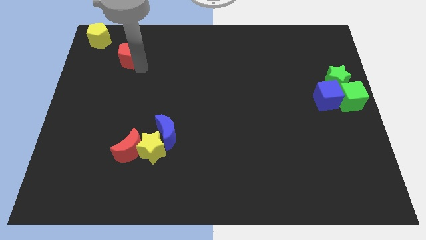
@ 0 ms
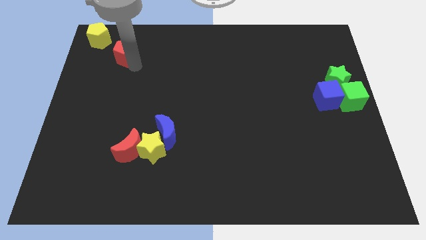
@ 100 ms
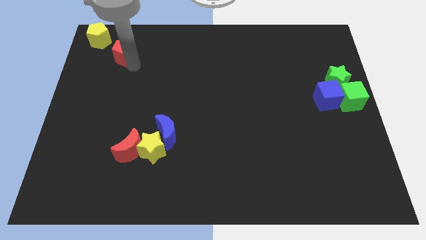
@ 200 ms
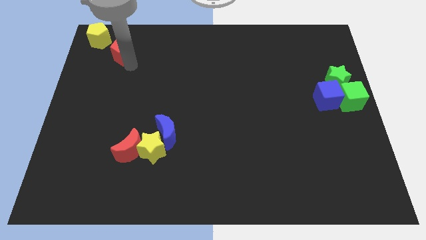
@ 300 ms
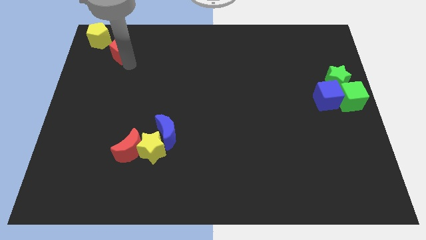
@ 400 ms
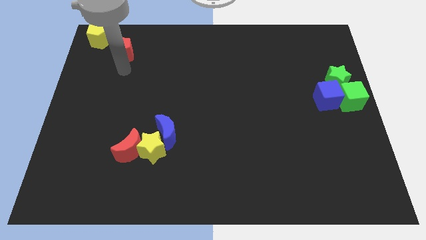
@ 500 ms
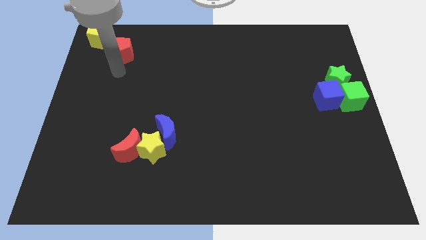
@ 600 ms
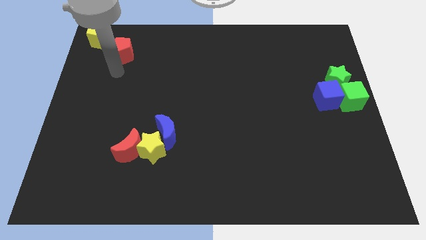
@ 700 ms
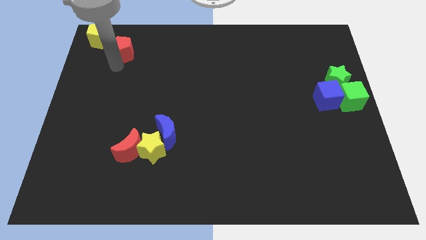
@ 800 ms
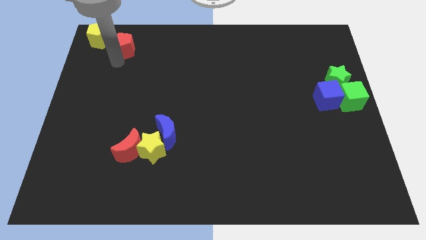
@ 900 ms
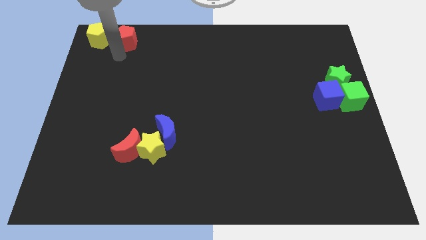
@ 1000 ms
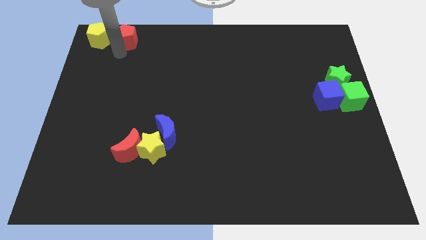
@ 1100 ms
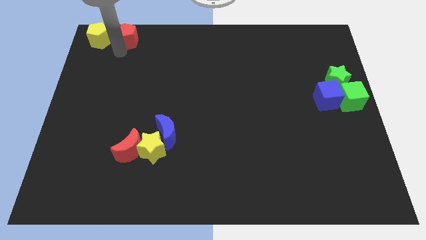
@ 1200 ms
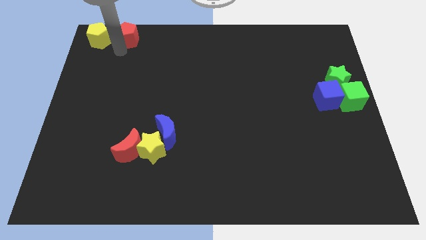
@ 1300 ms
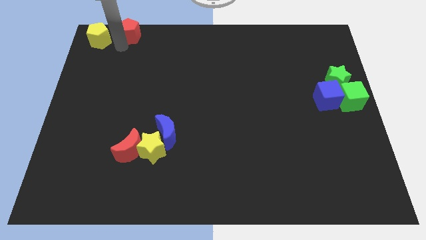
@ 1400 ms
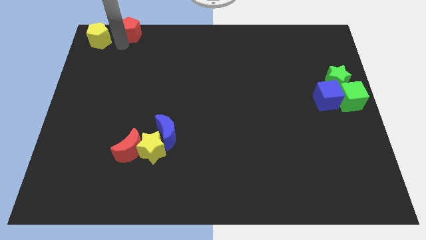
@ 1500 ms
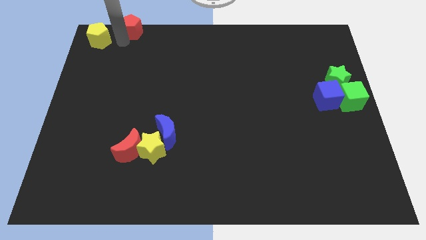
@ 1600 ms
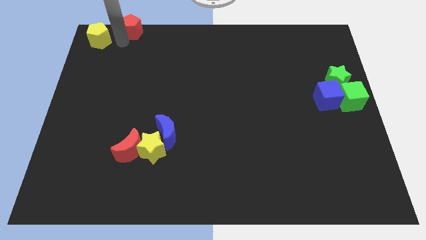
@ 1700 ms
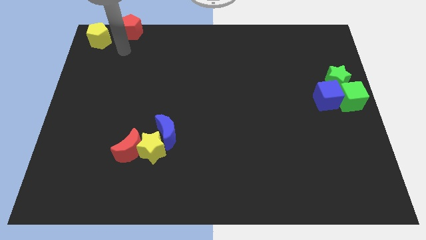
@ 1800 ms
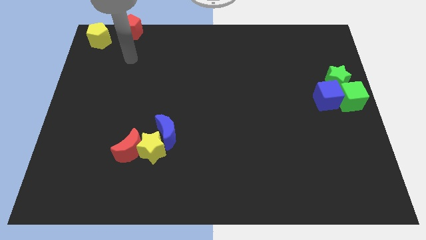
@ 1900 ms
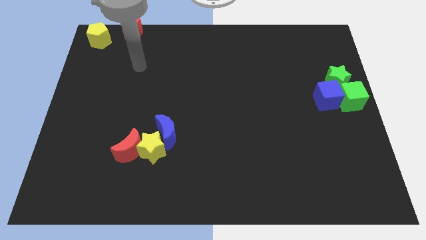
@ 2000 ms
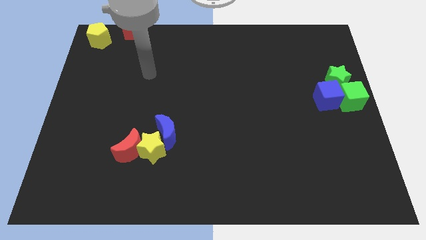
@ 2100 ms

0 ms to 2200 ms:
place red pentagon to the right of yellow pentagon

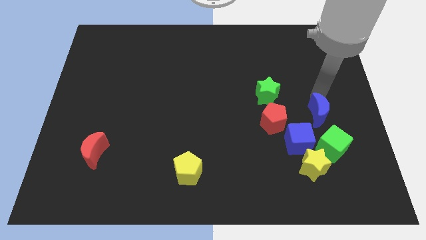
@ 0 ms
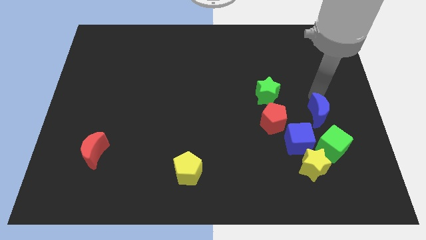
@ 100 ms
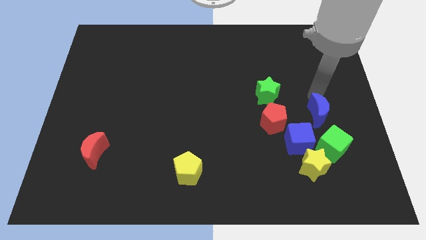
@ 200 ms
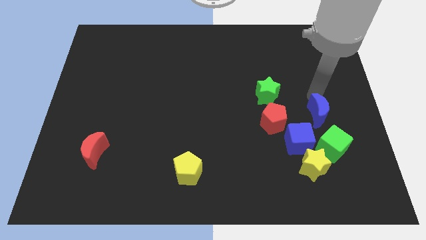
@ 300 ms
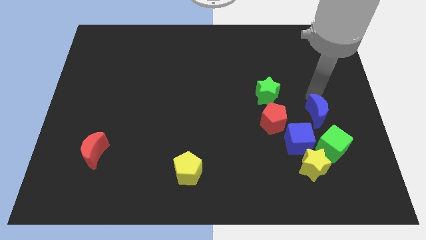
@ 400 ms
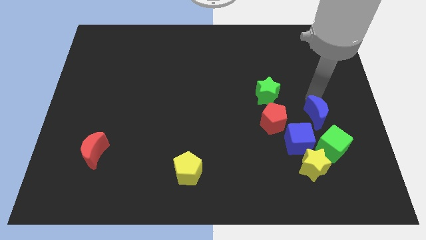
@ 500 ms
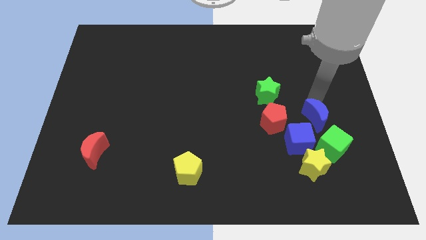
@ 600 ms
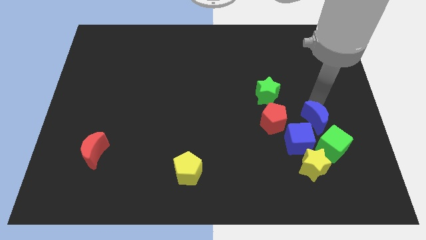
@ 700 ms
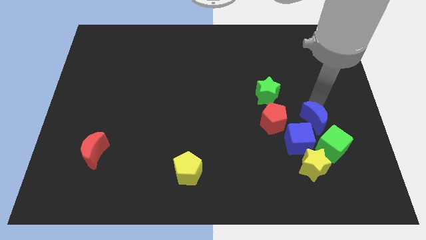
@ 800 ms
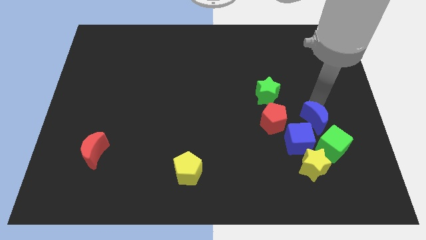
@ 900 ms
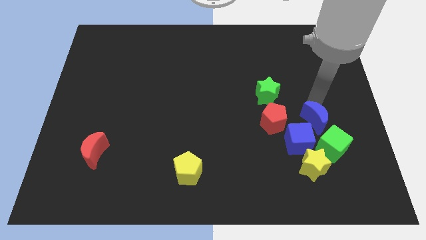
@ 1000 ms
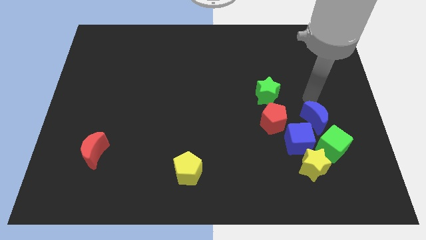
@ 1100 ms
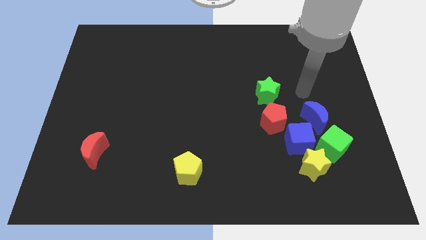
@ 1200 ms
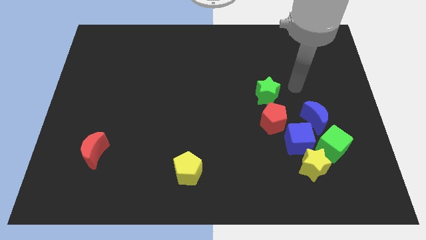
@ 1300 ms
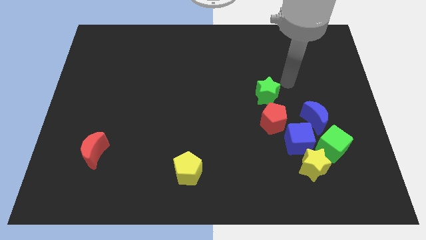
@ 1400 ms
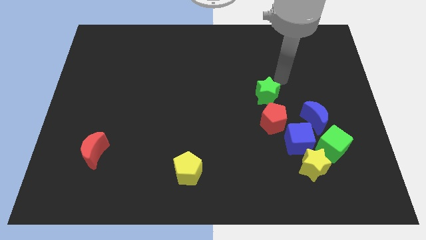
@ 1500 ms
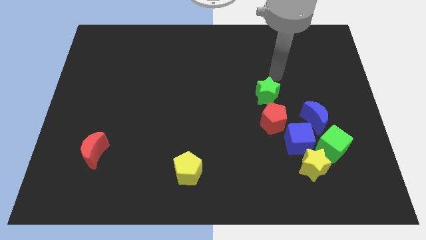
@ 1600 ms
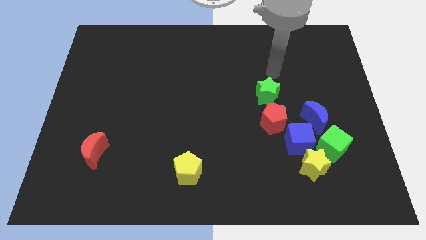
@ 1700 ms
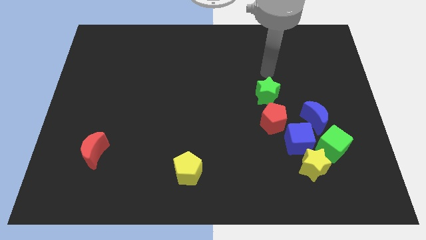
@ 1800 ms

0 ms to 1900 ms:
slide the blue moon close to the blue cube

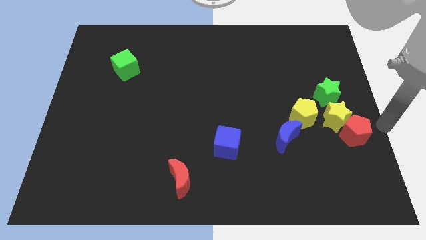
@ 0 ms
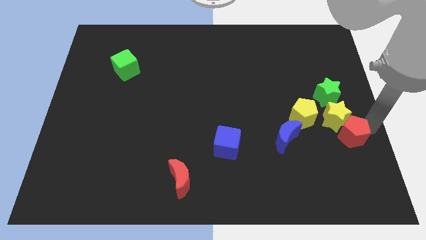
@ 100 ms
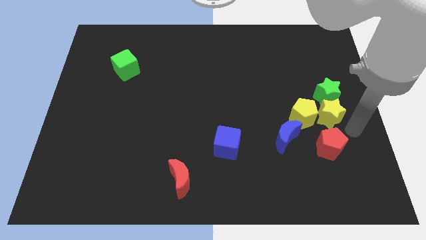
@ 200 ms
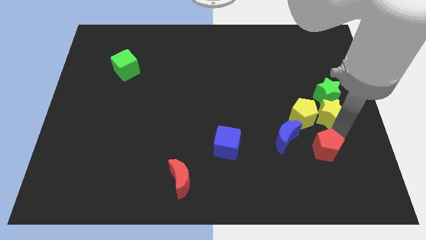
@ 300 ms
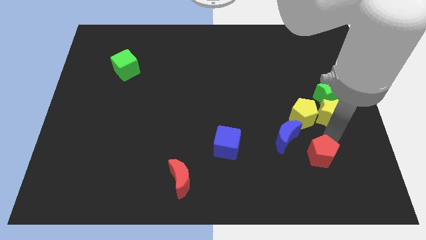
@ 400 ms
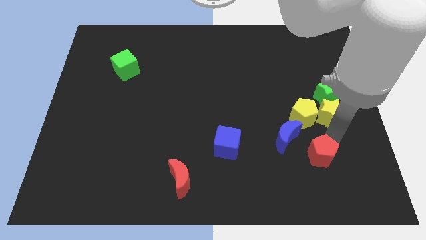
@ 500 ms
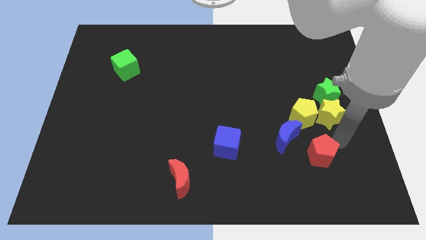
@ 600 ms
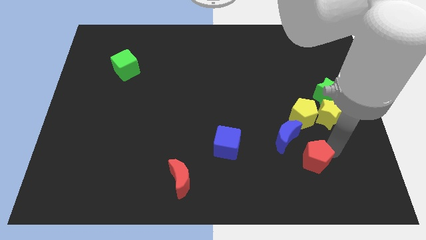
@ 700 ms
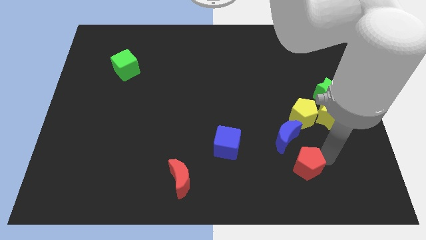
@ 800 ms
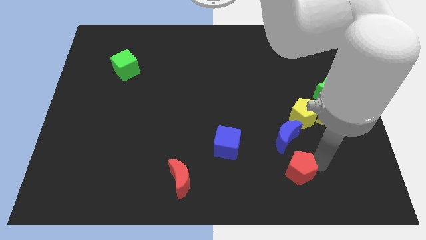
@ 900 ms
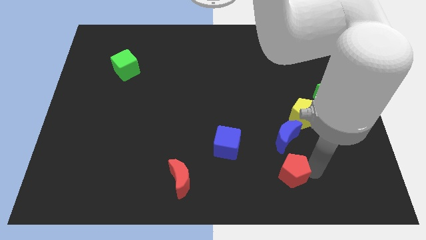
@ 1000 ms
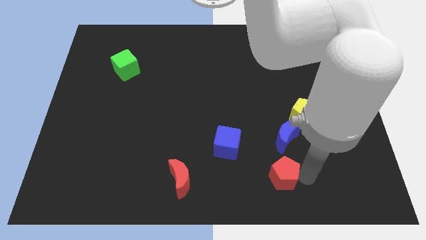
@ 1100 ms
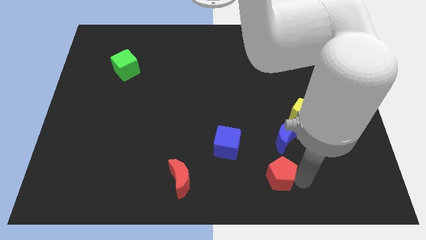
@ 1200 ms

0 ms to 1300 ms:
slide the red pentagon vertically below the blue moon

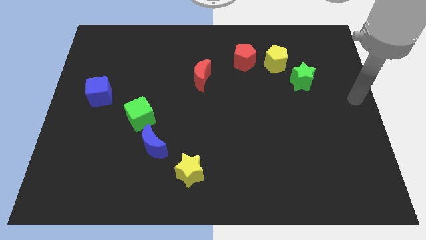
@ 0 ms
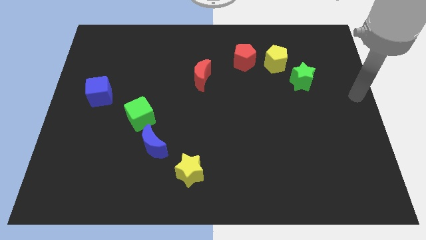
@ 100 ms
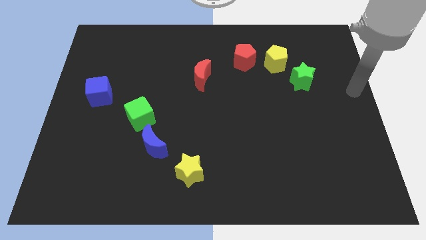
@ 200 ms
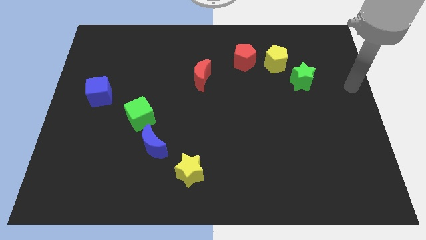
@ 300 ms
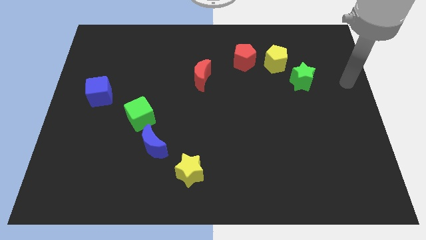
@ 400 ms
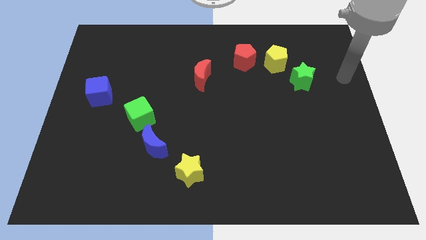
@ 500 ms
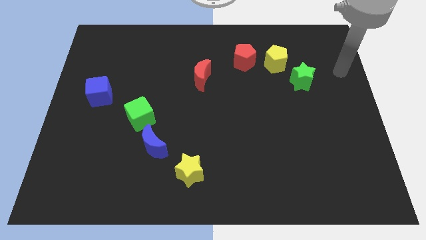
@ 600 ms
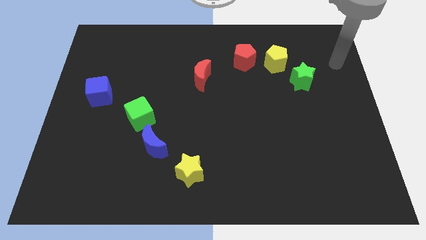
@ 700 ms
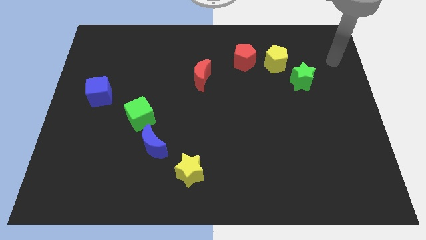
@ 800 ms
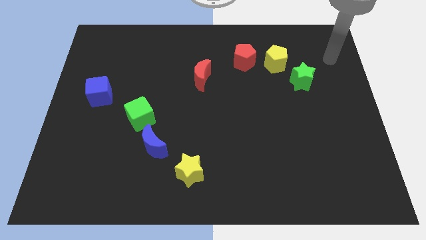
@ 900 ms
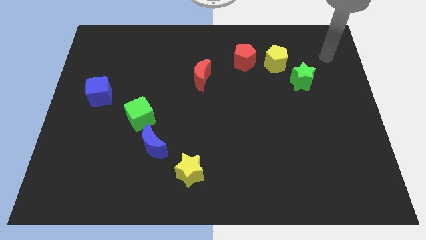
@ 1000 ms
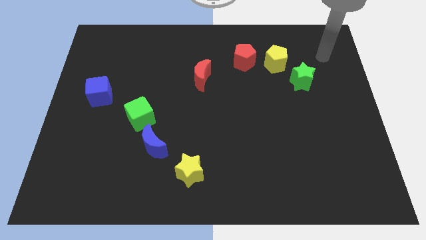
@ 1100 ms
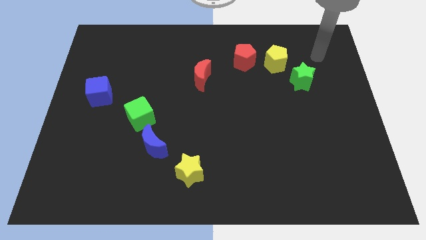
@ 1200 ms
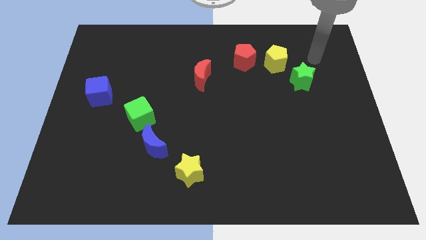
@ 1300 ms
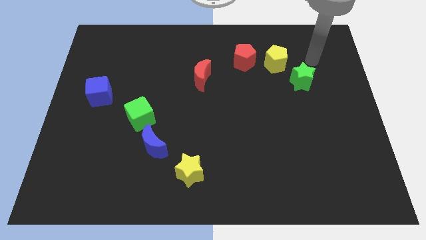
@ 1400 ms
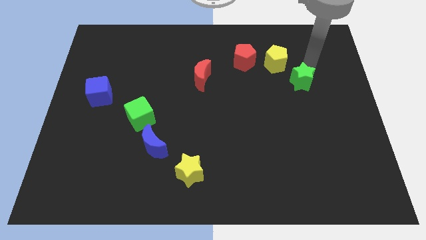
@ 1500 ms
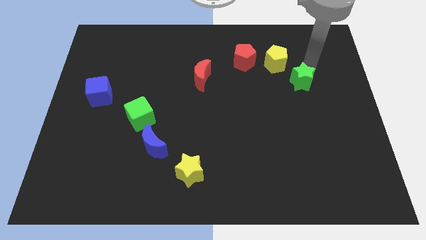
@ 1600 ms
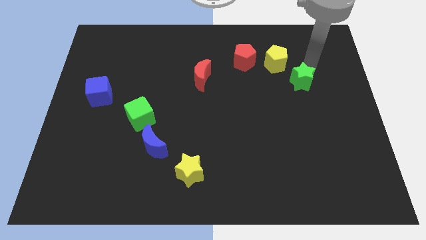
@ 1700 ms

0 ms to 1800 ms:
move your arm to the top of green star

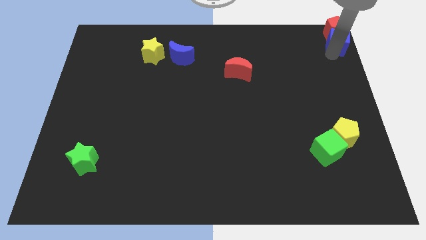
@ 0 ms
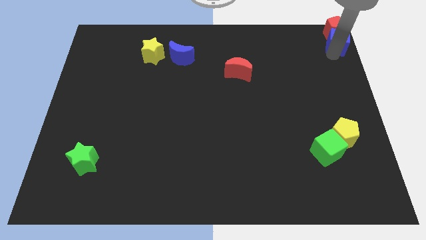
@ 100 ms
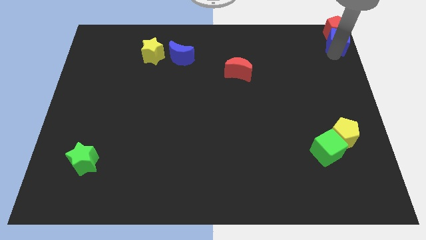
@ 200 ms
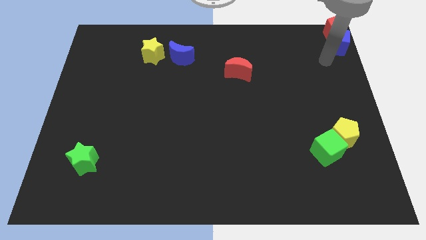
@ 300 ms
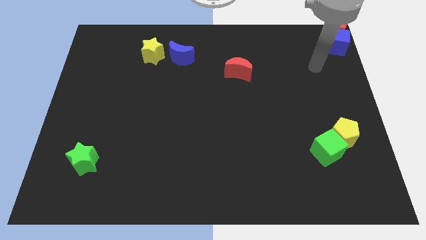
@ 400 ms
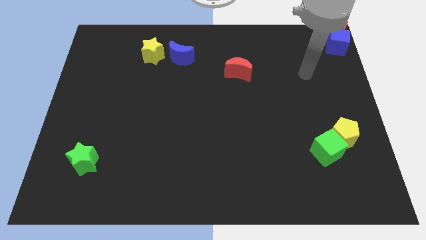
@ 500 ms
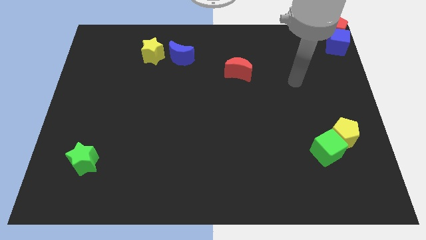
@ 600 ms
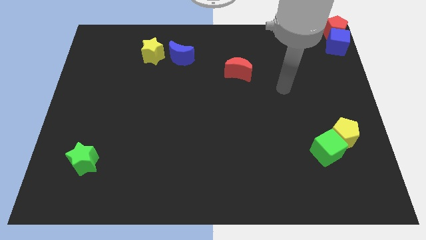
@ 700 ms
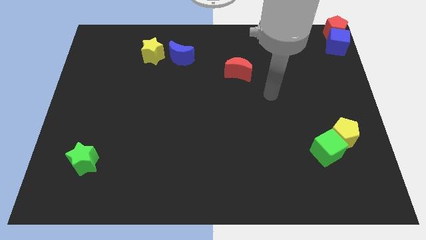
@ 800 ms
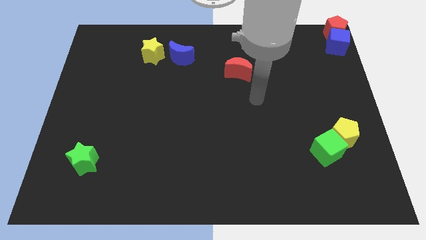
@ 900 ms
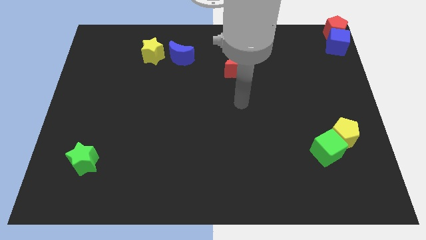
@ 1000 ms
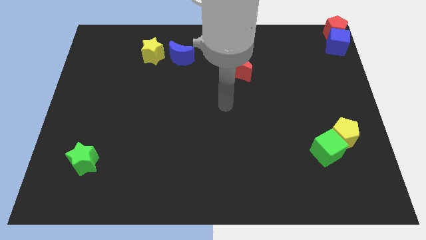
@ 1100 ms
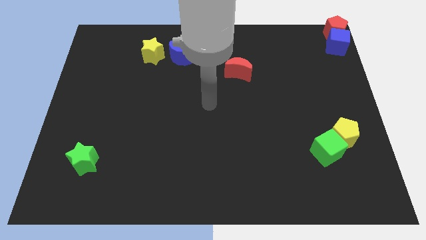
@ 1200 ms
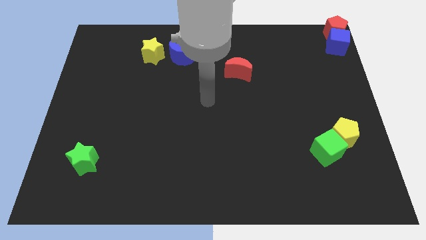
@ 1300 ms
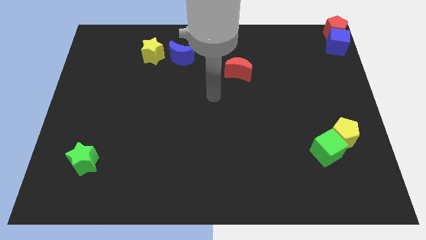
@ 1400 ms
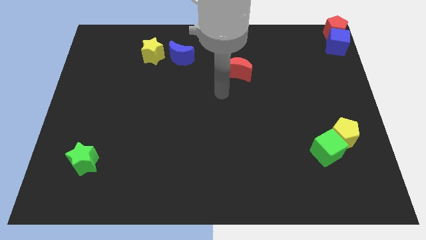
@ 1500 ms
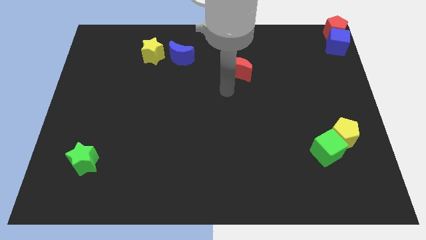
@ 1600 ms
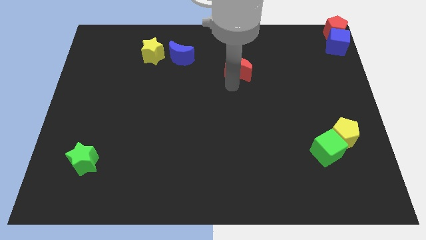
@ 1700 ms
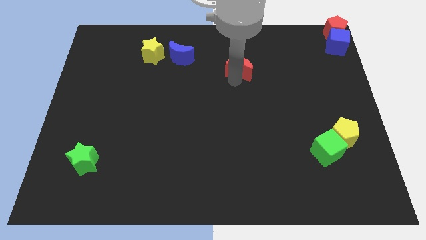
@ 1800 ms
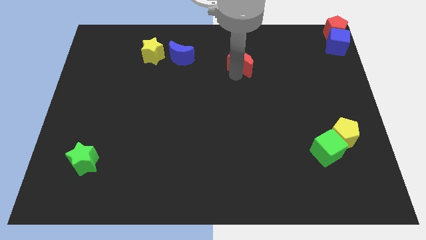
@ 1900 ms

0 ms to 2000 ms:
place the arm to the bottom of the red crescent
